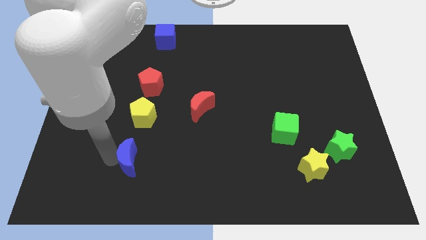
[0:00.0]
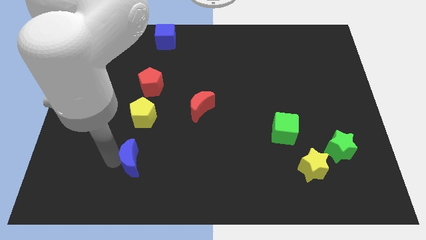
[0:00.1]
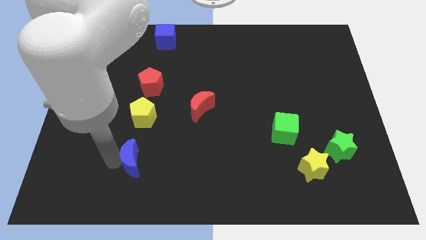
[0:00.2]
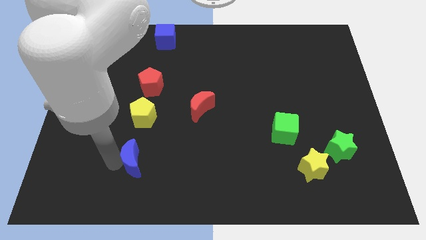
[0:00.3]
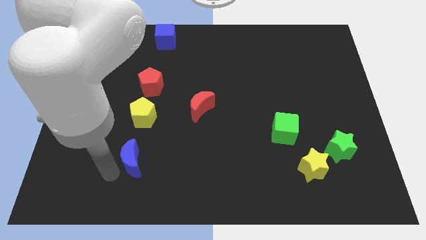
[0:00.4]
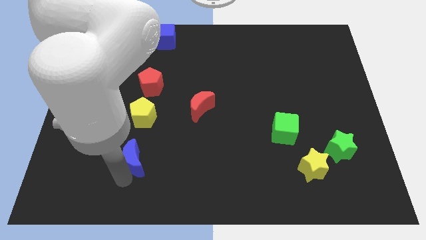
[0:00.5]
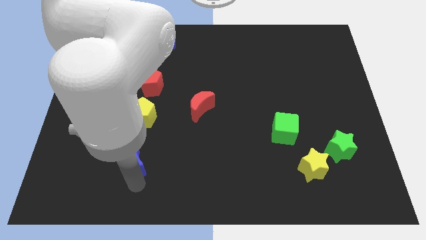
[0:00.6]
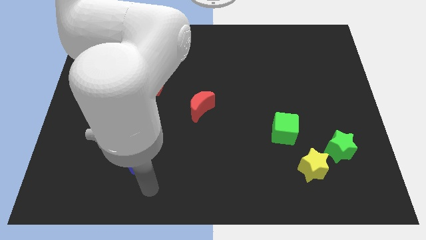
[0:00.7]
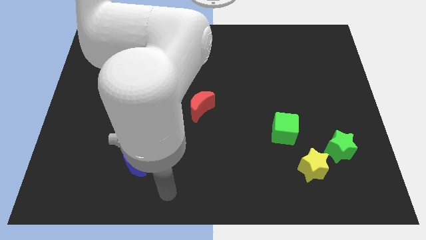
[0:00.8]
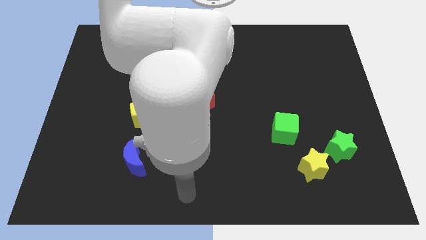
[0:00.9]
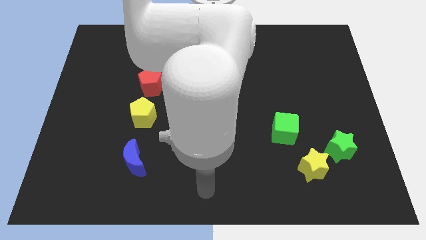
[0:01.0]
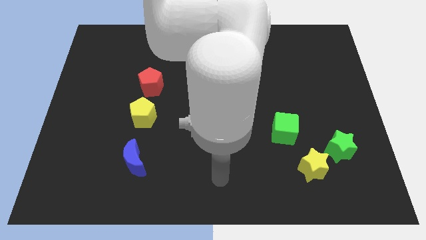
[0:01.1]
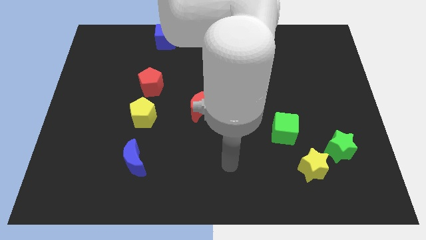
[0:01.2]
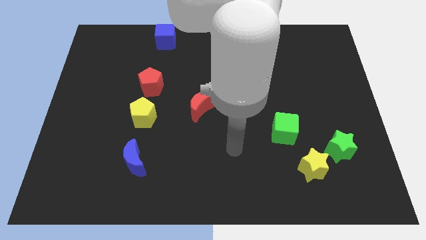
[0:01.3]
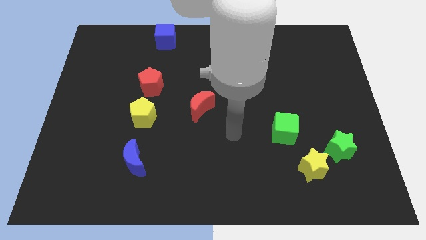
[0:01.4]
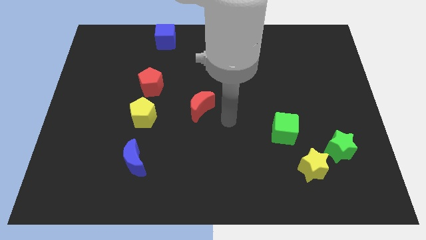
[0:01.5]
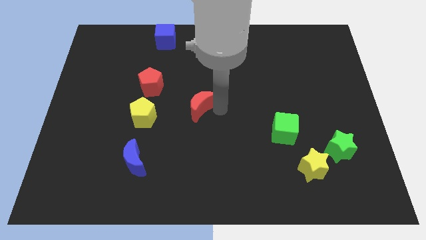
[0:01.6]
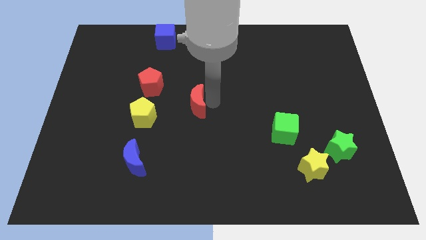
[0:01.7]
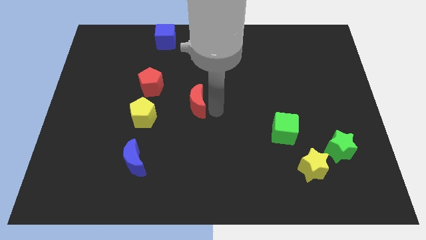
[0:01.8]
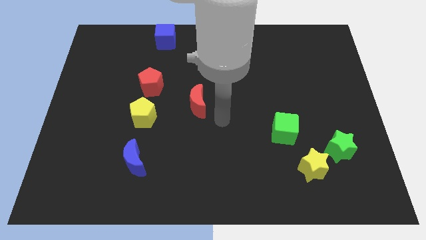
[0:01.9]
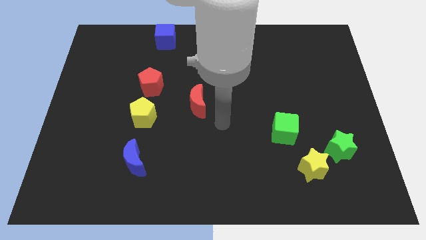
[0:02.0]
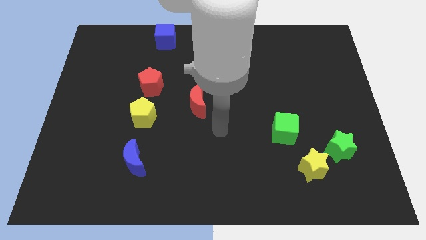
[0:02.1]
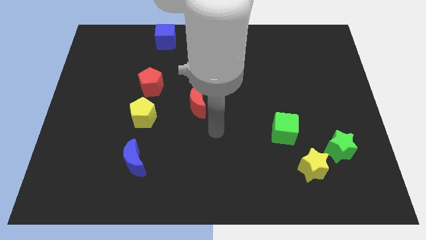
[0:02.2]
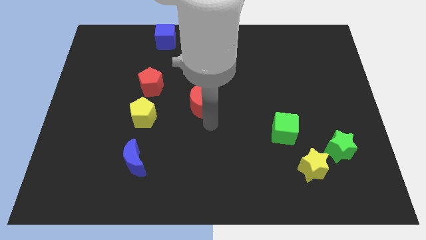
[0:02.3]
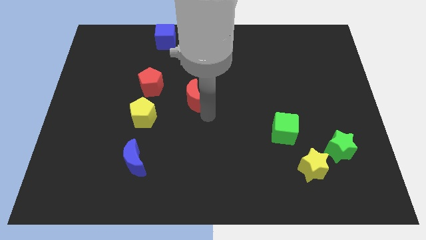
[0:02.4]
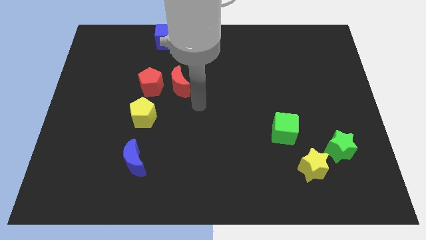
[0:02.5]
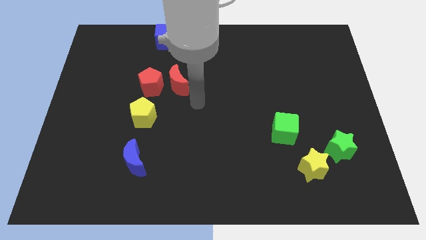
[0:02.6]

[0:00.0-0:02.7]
push your arm to the right side

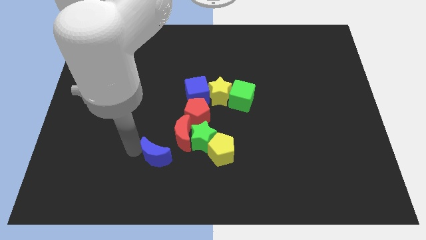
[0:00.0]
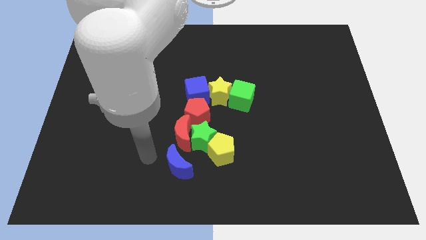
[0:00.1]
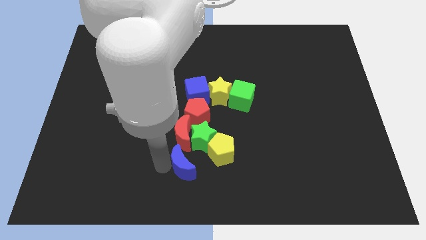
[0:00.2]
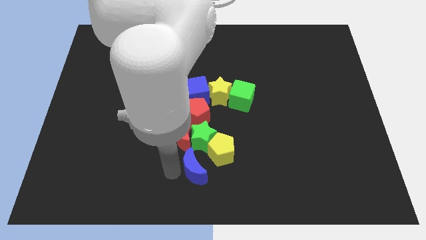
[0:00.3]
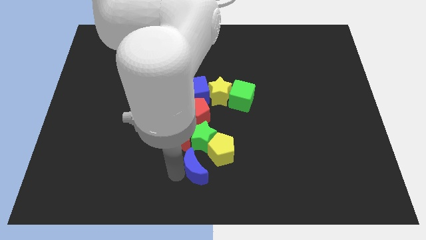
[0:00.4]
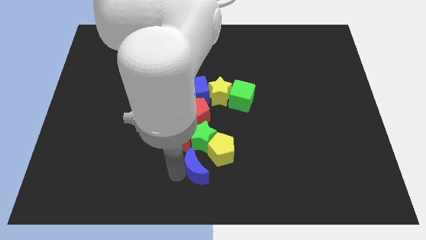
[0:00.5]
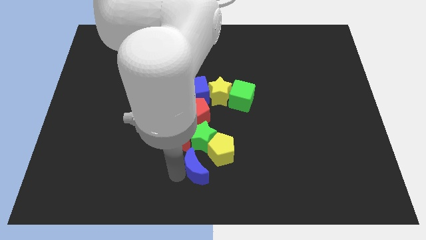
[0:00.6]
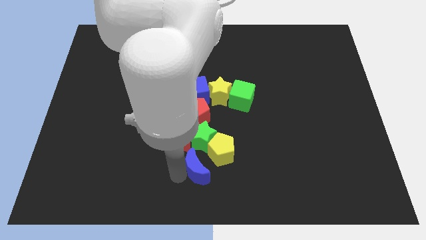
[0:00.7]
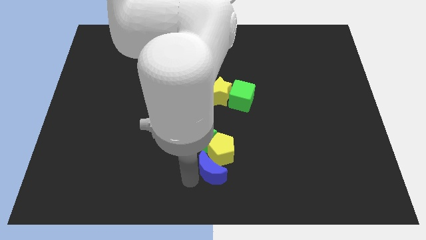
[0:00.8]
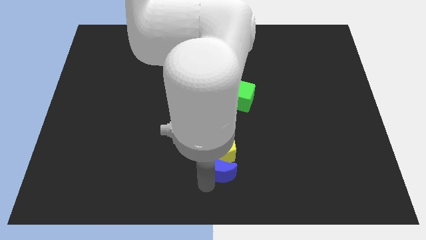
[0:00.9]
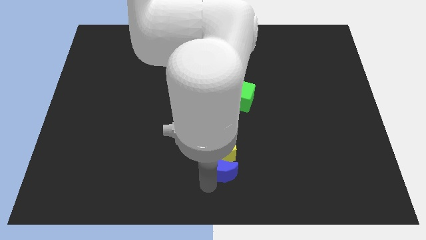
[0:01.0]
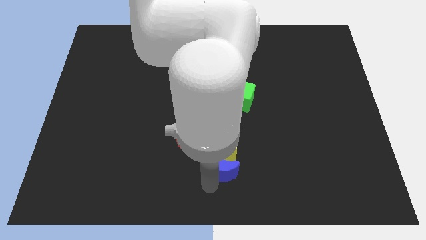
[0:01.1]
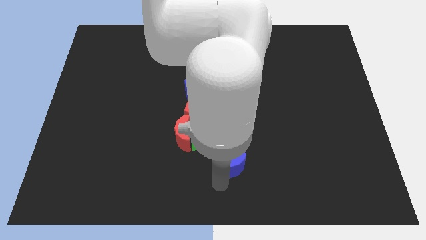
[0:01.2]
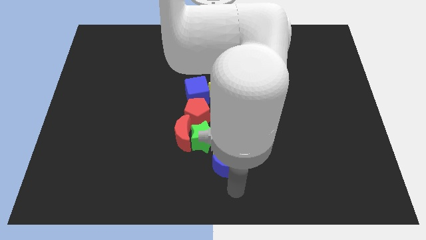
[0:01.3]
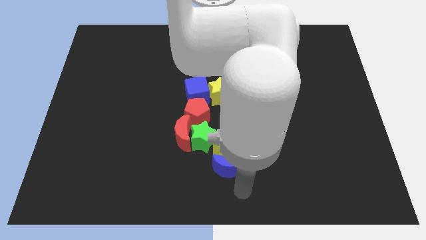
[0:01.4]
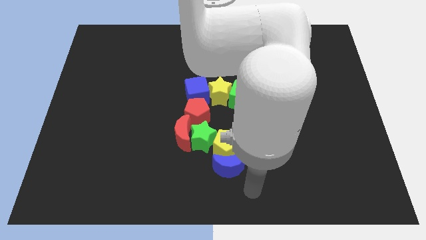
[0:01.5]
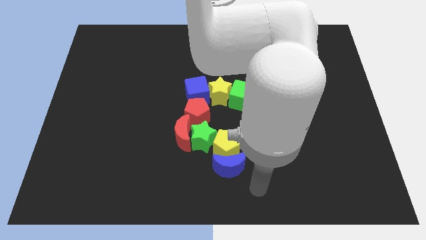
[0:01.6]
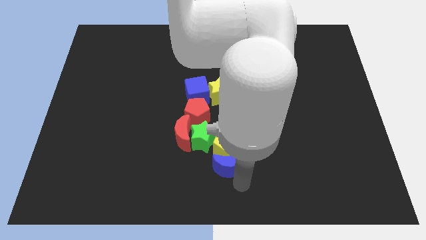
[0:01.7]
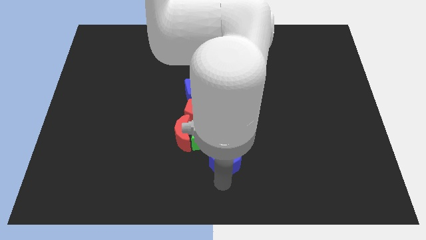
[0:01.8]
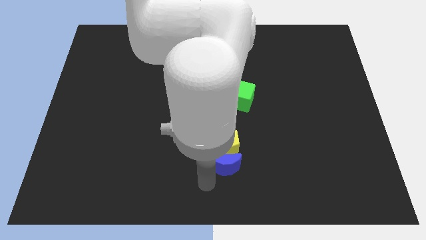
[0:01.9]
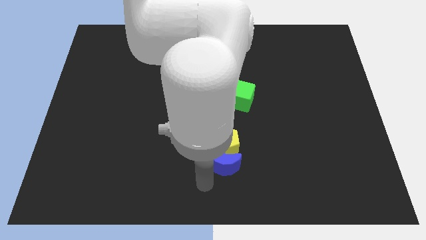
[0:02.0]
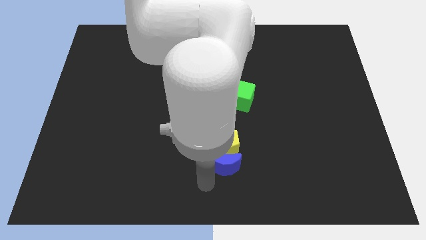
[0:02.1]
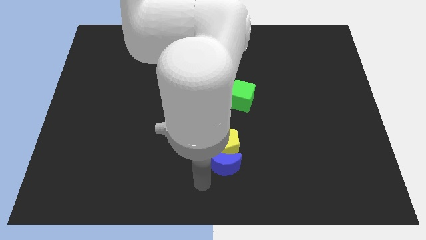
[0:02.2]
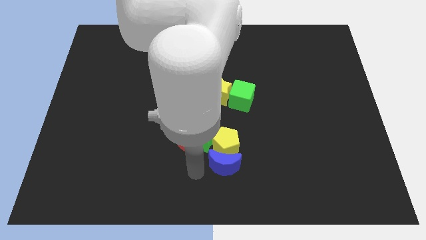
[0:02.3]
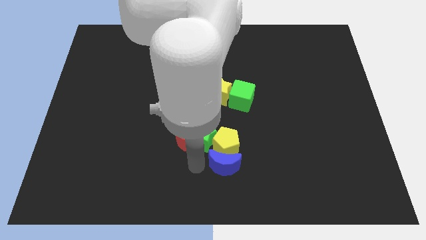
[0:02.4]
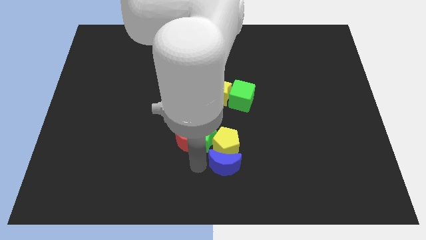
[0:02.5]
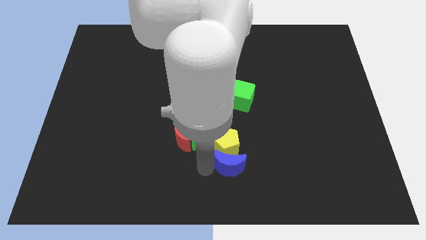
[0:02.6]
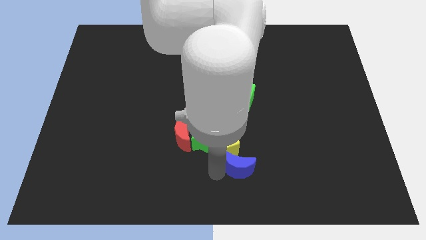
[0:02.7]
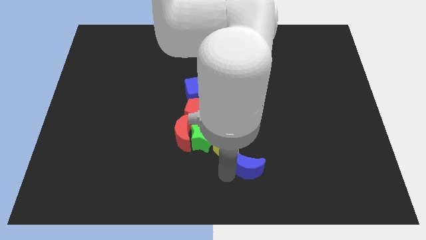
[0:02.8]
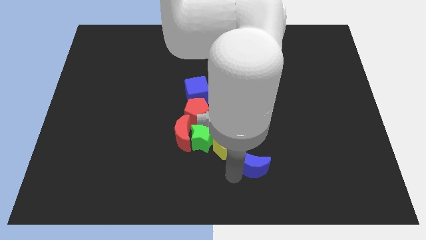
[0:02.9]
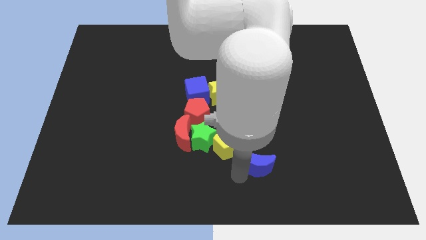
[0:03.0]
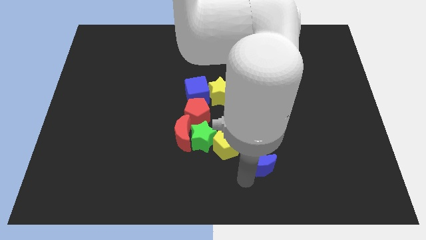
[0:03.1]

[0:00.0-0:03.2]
move the blue moon diagonal to the yellow pentagon

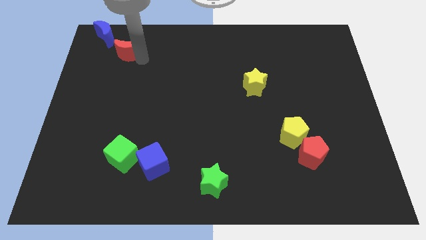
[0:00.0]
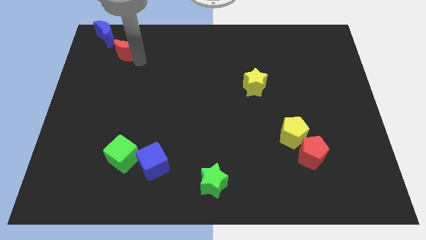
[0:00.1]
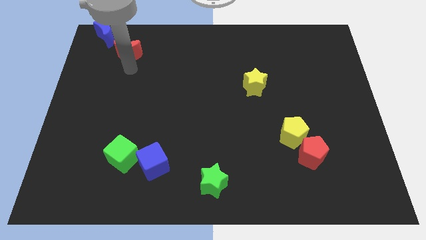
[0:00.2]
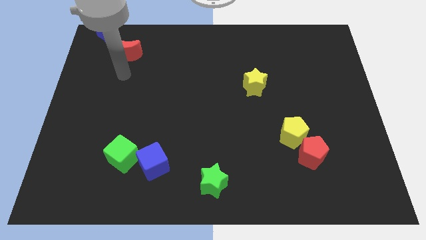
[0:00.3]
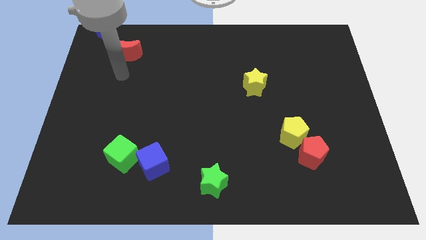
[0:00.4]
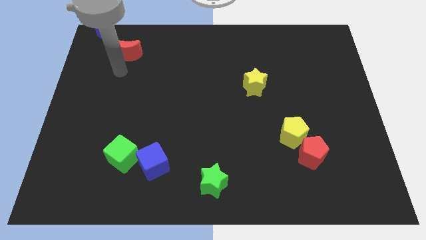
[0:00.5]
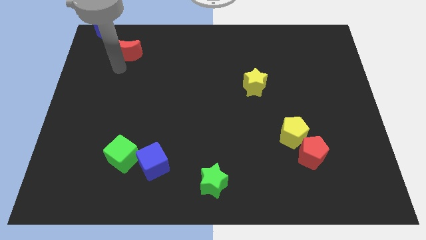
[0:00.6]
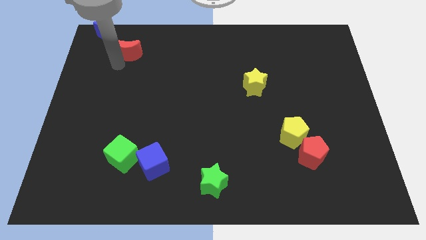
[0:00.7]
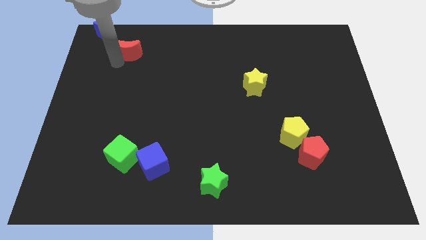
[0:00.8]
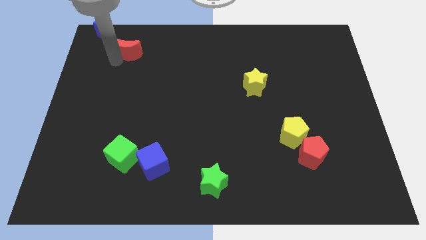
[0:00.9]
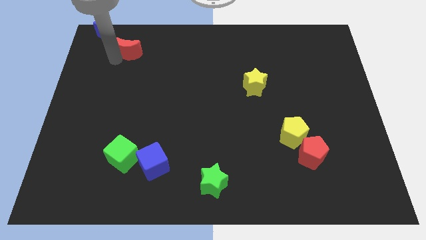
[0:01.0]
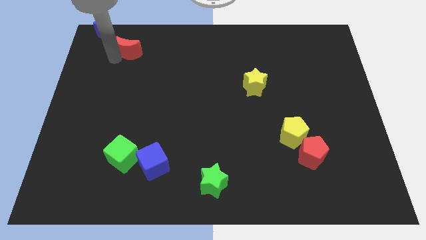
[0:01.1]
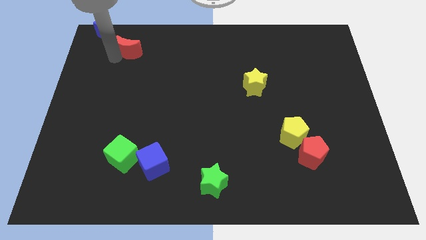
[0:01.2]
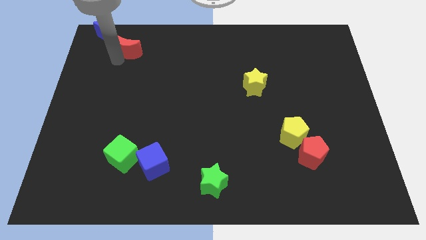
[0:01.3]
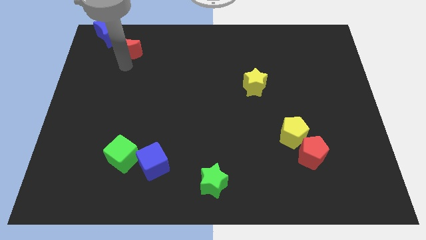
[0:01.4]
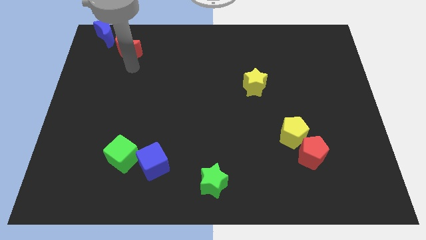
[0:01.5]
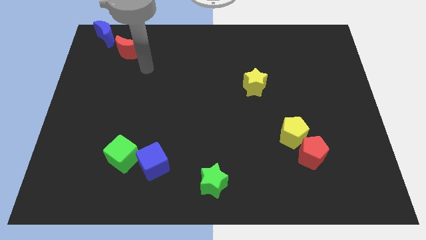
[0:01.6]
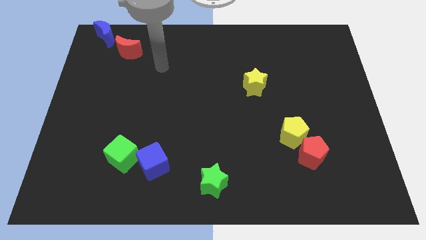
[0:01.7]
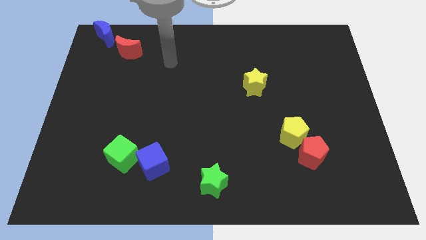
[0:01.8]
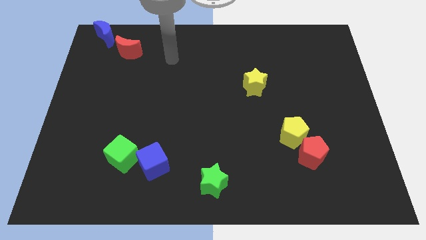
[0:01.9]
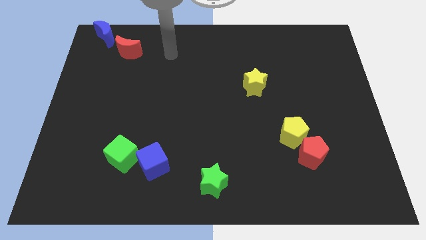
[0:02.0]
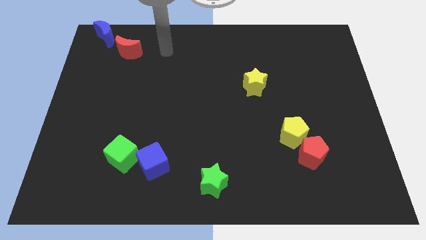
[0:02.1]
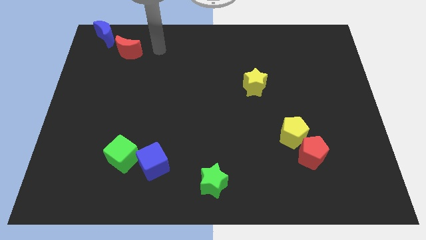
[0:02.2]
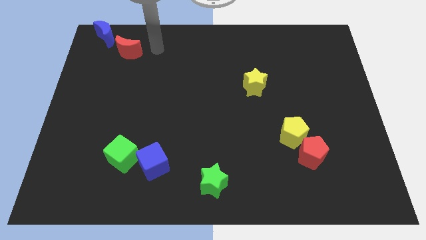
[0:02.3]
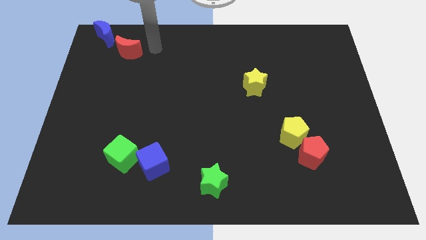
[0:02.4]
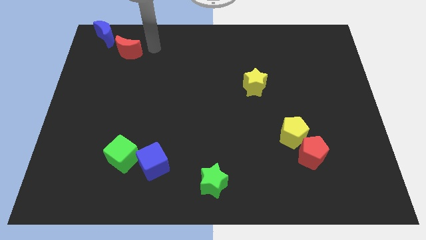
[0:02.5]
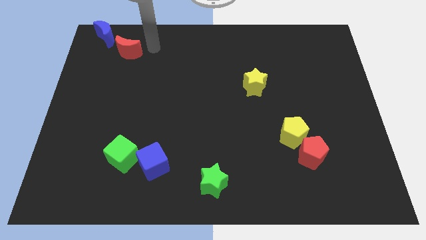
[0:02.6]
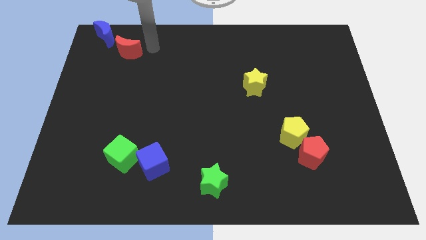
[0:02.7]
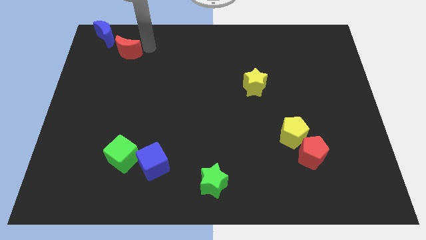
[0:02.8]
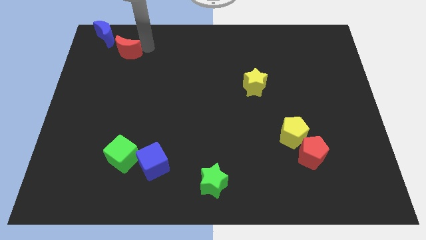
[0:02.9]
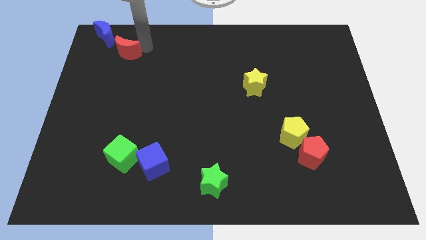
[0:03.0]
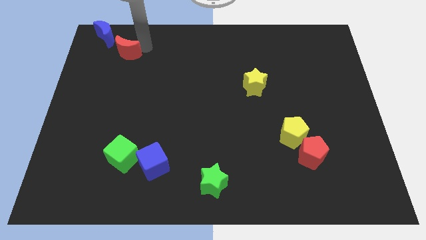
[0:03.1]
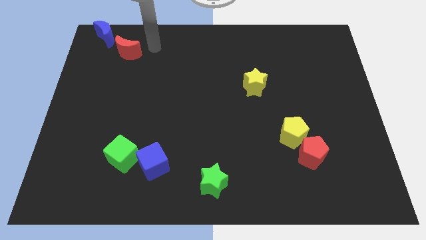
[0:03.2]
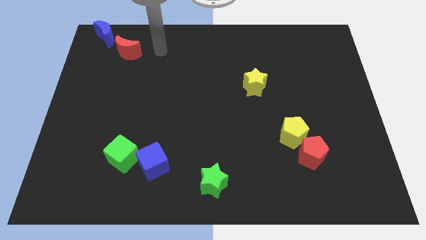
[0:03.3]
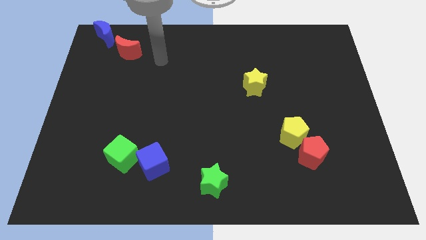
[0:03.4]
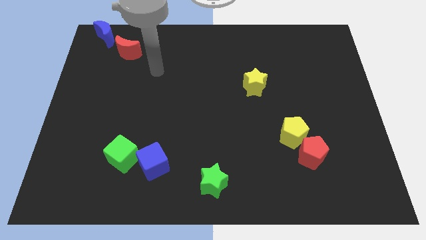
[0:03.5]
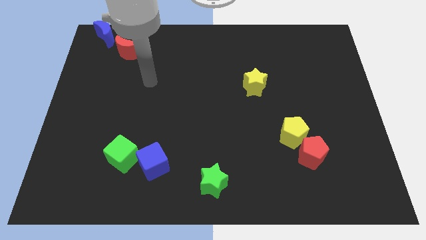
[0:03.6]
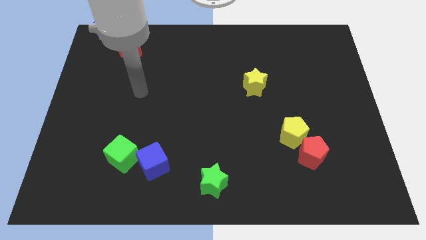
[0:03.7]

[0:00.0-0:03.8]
put red crescent diagonally below blue crescent
